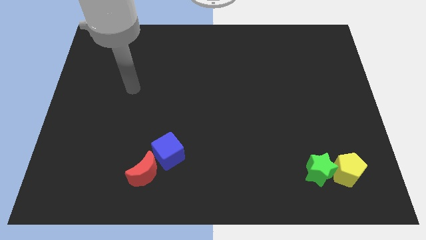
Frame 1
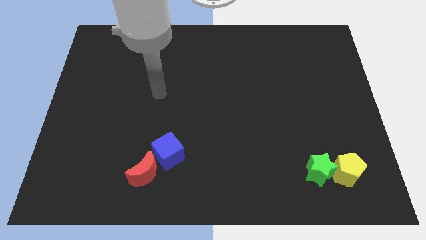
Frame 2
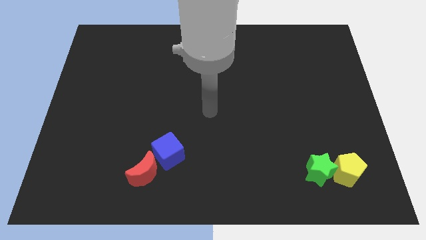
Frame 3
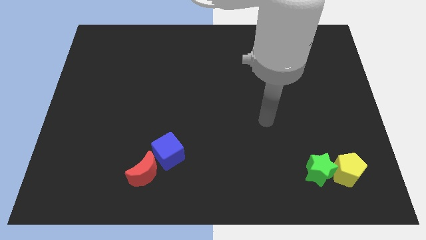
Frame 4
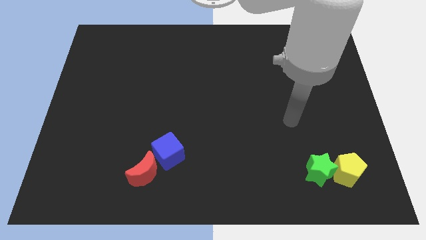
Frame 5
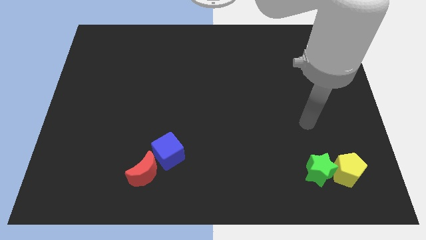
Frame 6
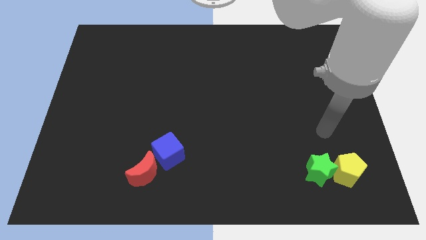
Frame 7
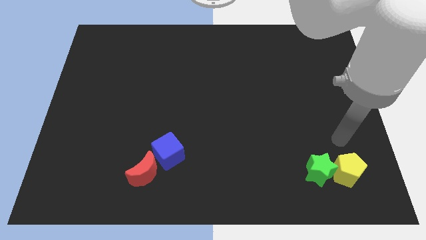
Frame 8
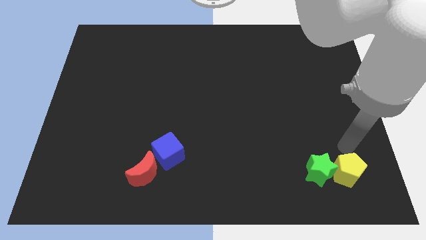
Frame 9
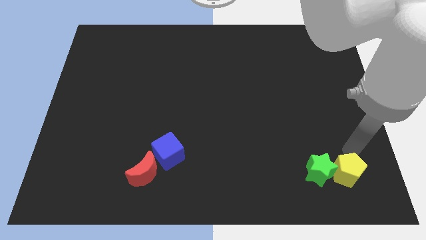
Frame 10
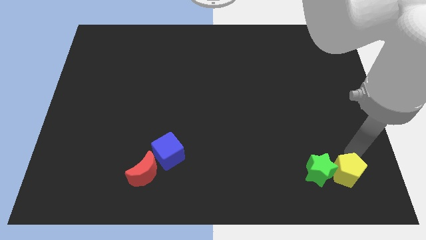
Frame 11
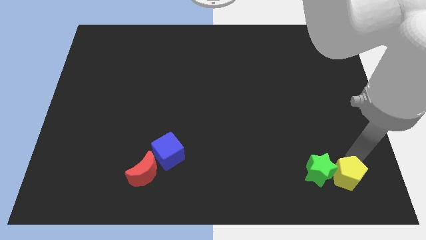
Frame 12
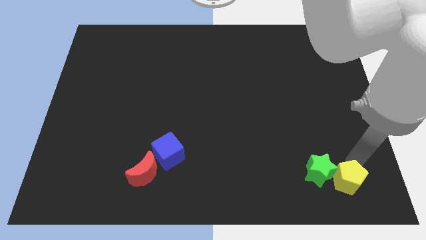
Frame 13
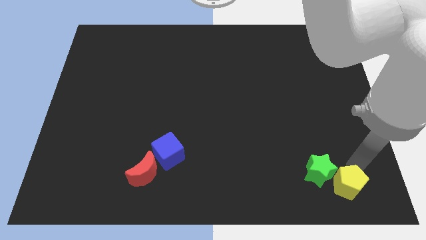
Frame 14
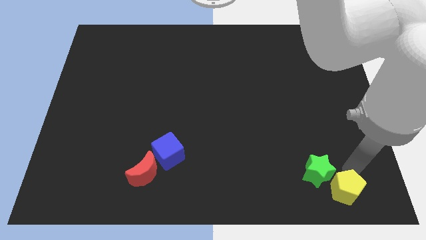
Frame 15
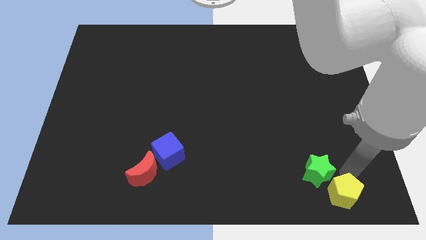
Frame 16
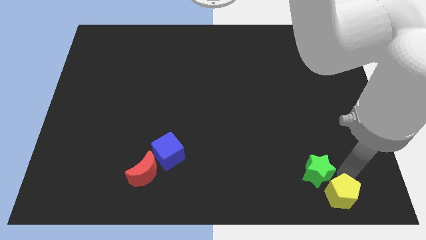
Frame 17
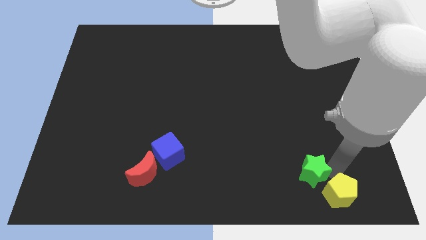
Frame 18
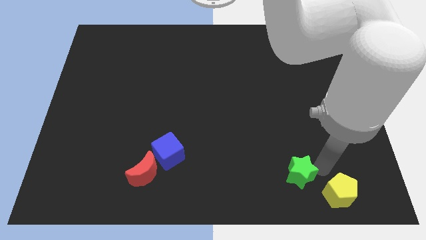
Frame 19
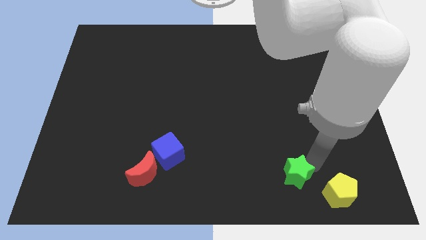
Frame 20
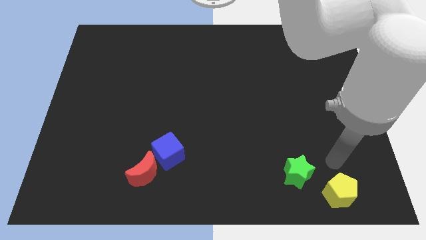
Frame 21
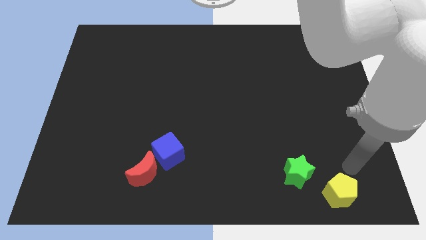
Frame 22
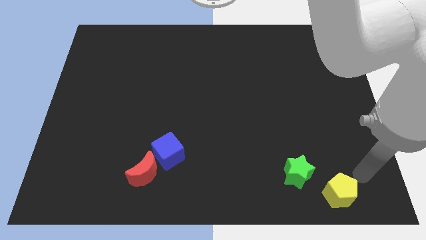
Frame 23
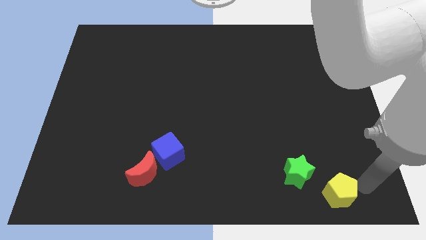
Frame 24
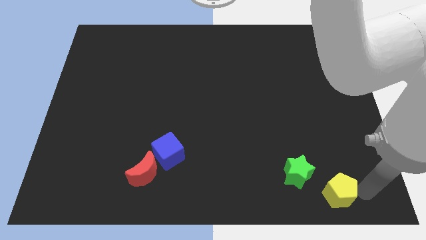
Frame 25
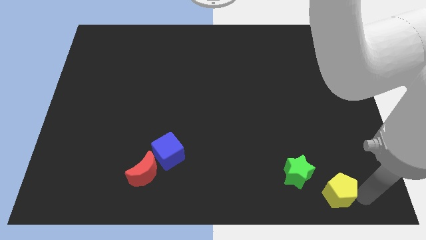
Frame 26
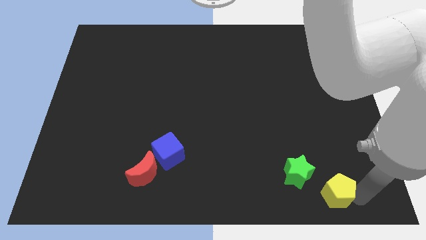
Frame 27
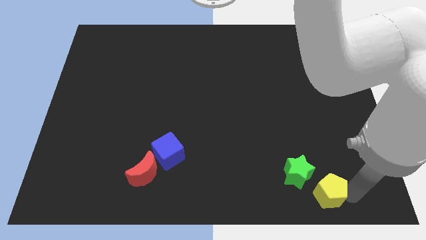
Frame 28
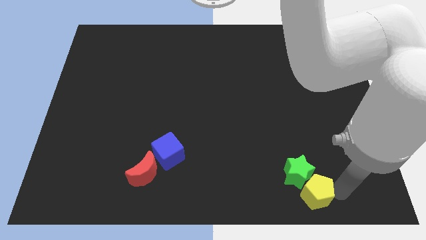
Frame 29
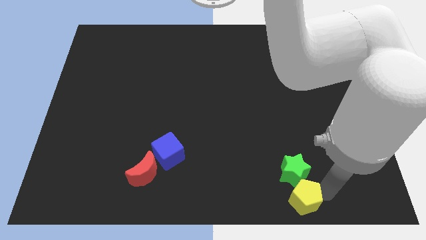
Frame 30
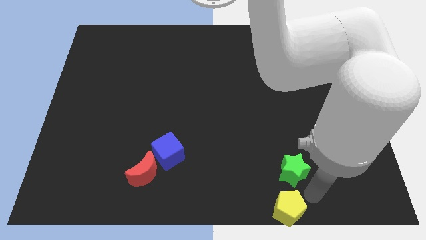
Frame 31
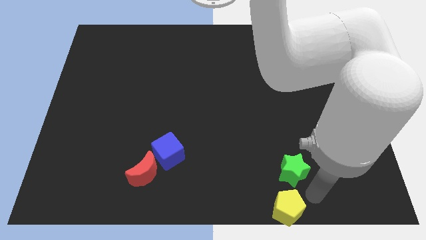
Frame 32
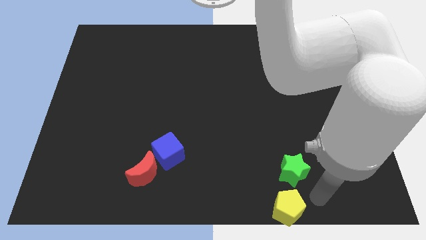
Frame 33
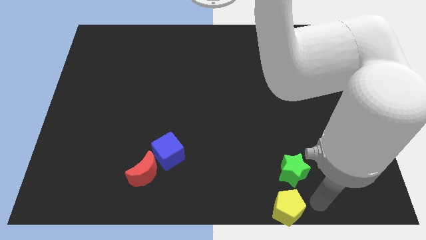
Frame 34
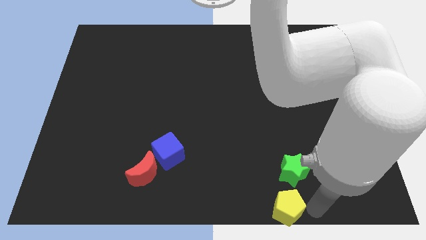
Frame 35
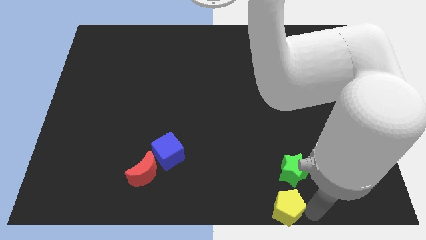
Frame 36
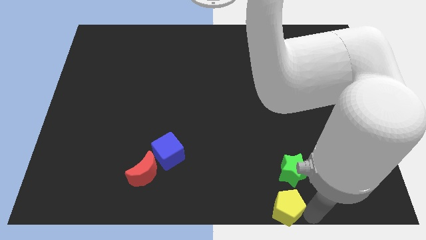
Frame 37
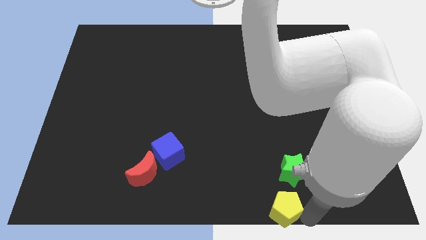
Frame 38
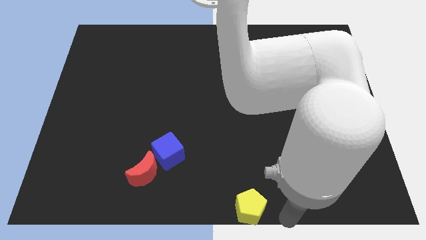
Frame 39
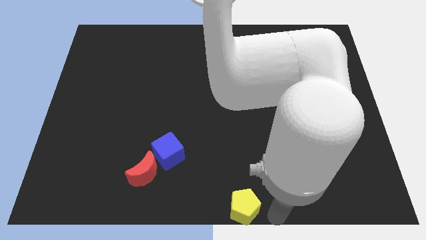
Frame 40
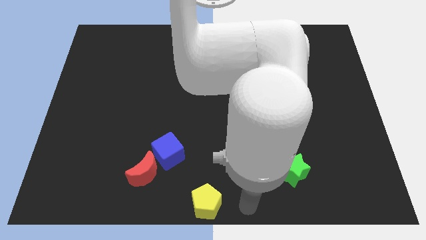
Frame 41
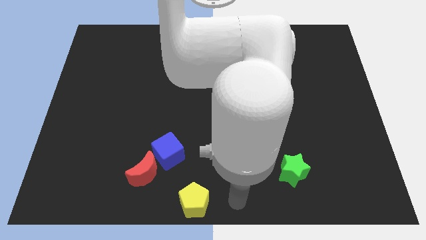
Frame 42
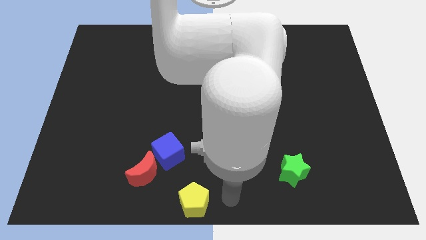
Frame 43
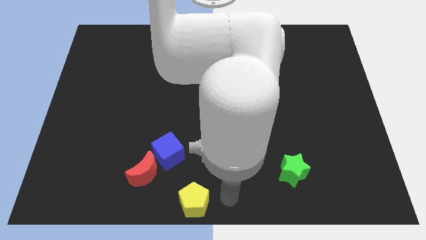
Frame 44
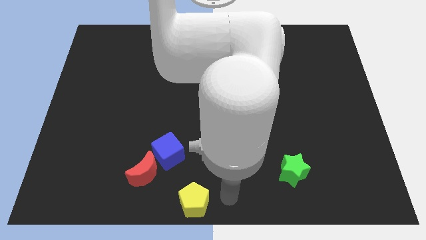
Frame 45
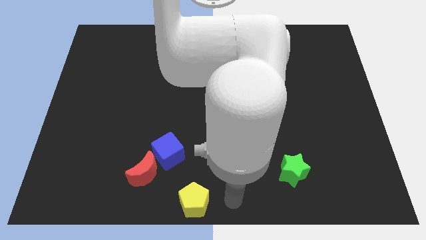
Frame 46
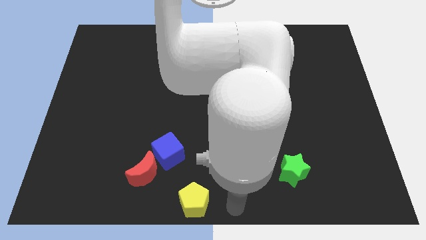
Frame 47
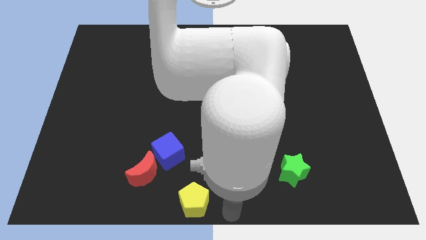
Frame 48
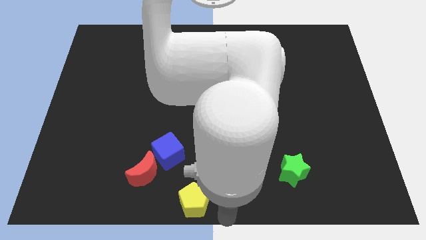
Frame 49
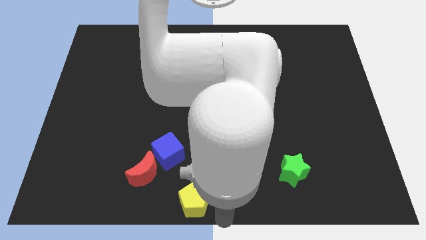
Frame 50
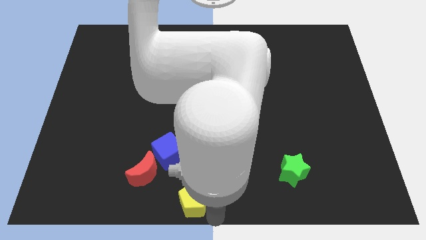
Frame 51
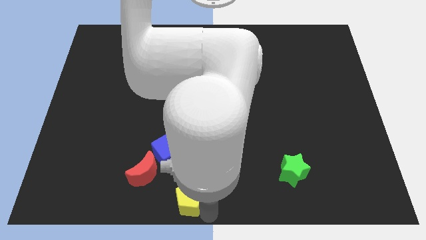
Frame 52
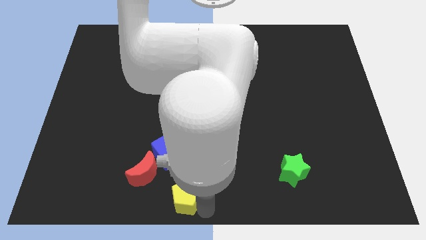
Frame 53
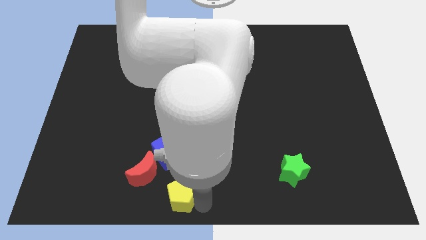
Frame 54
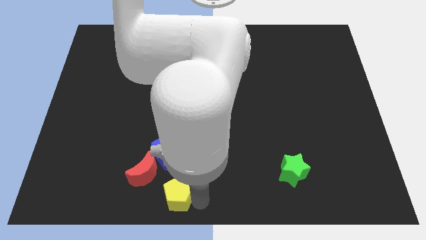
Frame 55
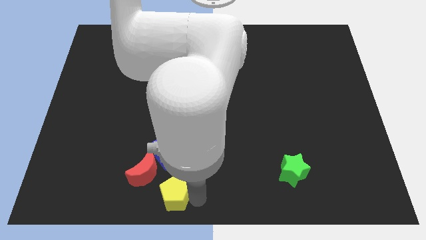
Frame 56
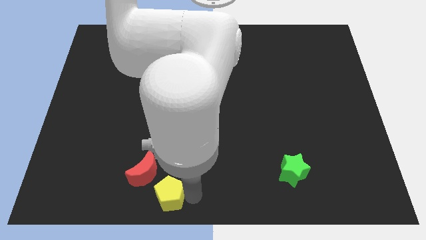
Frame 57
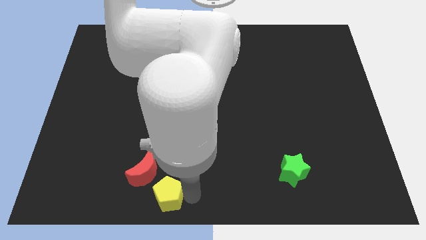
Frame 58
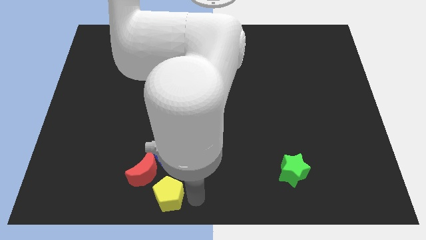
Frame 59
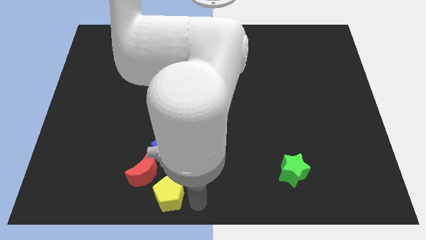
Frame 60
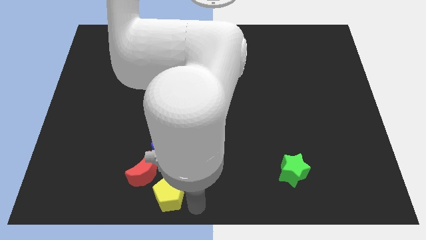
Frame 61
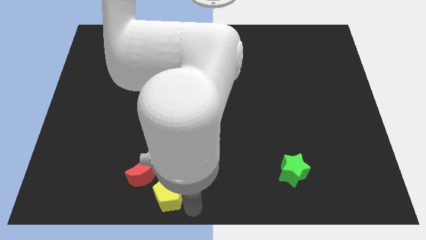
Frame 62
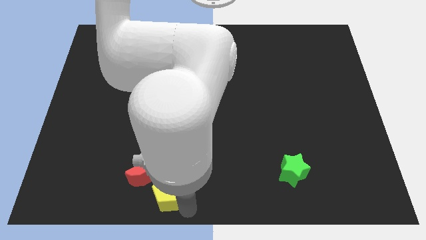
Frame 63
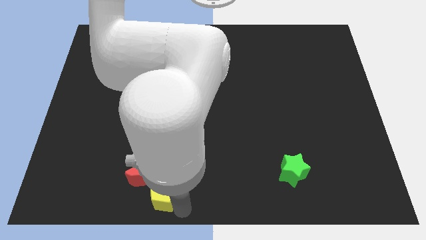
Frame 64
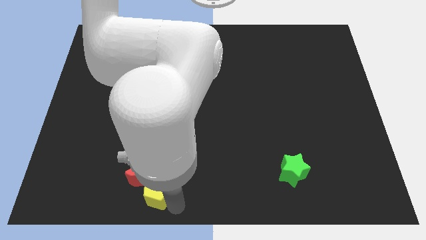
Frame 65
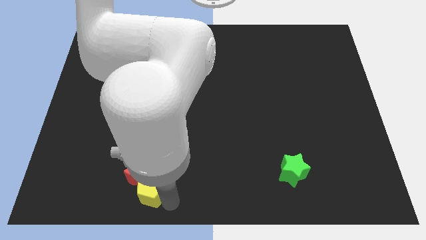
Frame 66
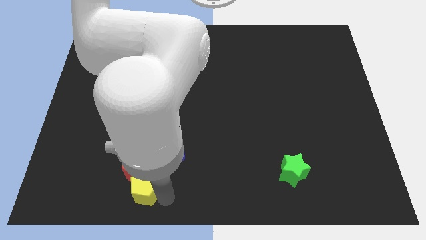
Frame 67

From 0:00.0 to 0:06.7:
push the pentagon next to the moon

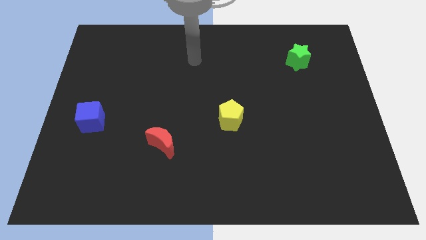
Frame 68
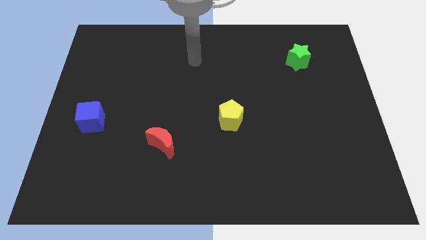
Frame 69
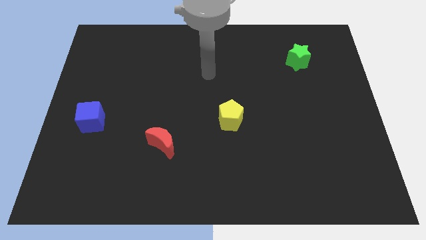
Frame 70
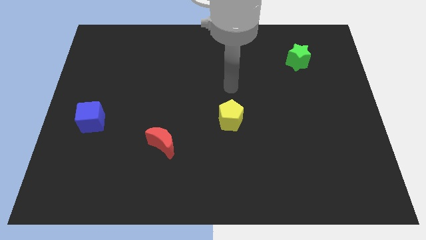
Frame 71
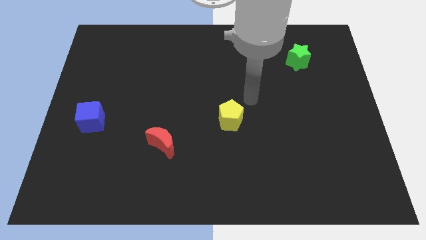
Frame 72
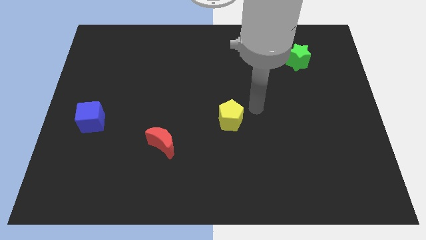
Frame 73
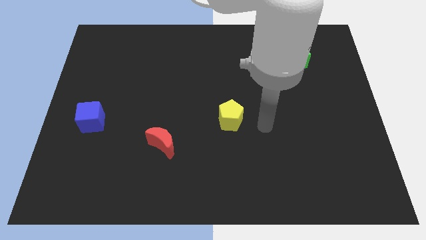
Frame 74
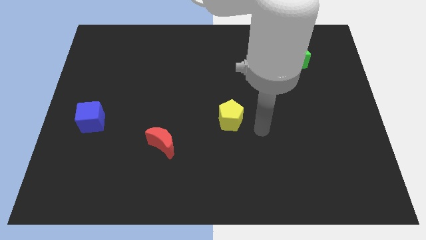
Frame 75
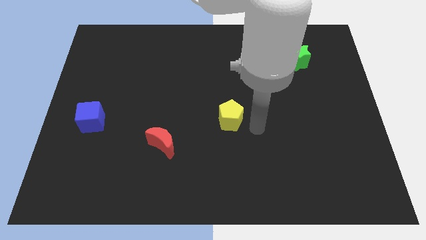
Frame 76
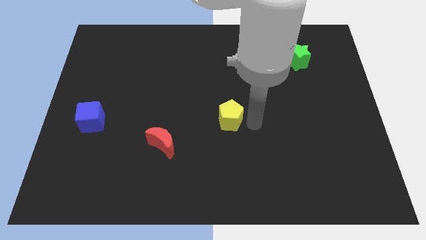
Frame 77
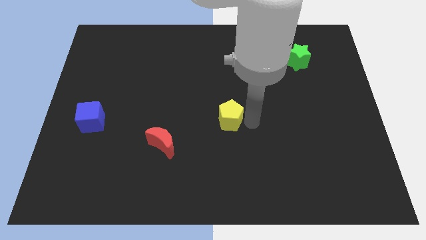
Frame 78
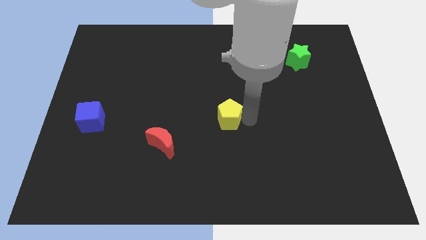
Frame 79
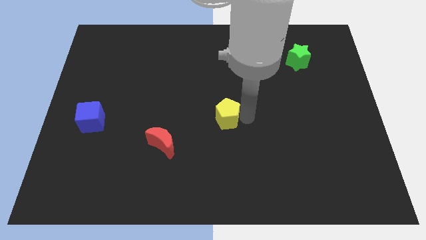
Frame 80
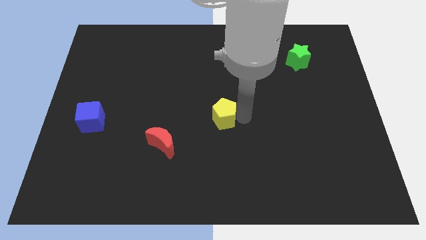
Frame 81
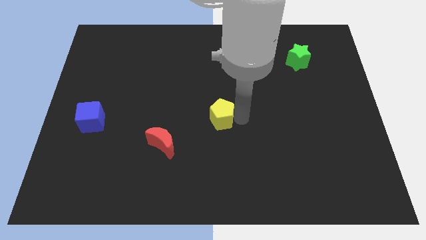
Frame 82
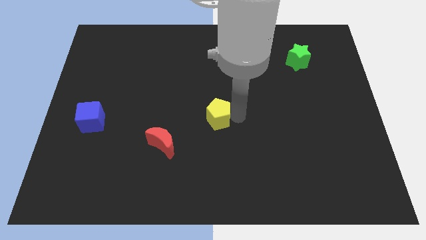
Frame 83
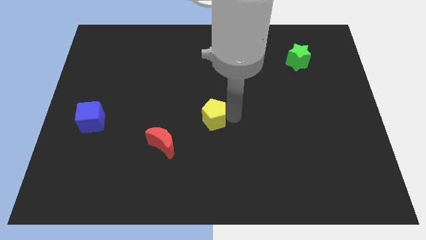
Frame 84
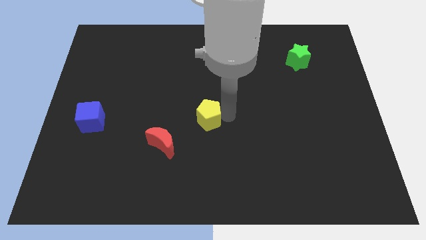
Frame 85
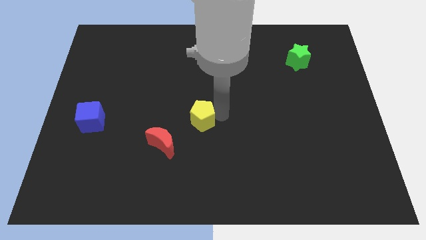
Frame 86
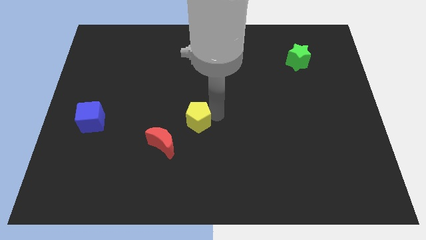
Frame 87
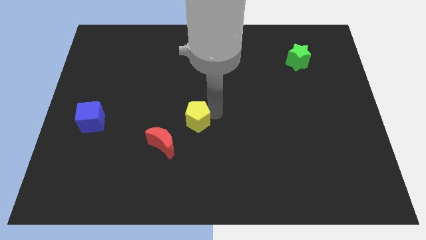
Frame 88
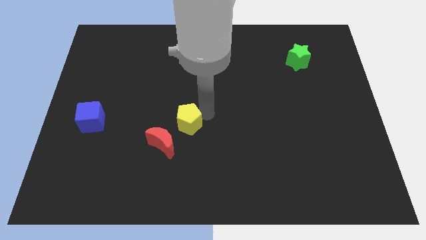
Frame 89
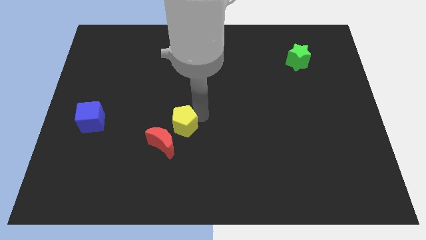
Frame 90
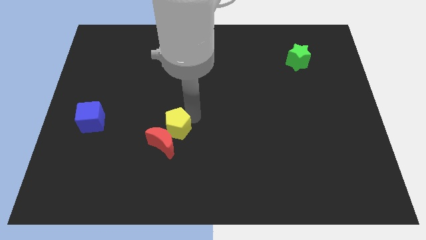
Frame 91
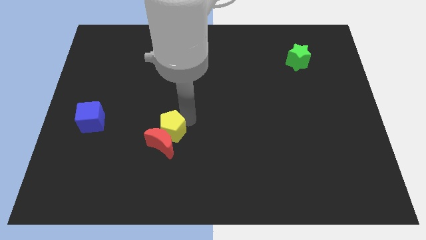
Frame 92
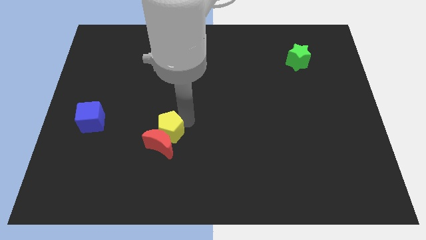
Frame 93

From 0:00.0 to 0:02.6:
slide the yellow block towards the red block
